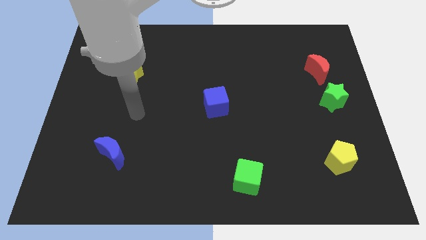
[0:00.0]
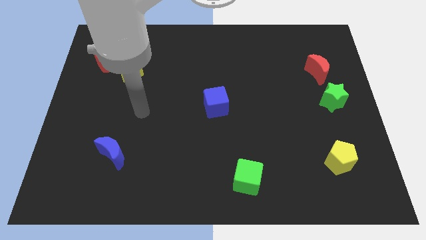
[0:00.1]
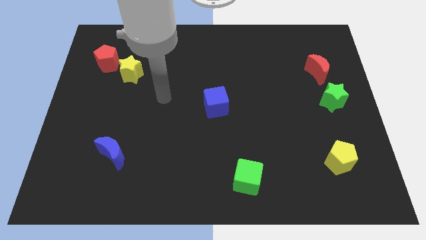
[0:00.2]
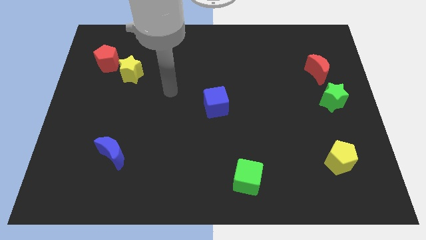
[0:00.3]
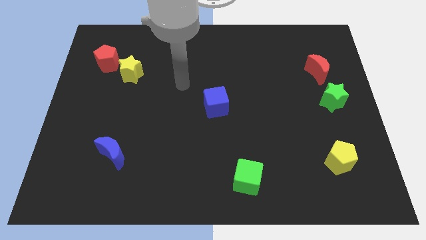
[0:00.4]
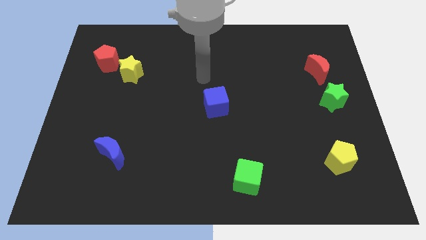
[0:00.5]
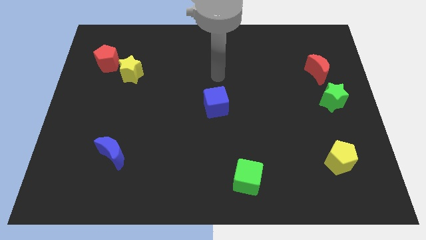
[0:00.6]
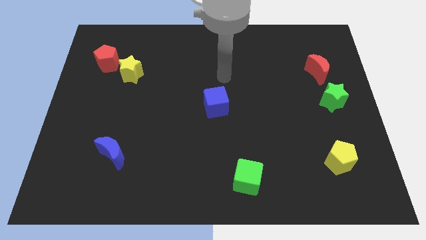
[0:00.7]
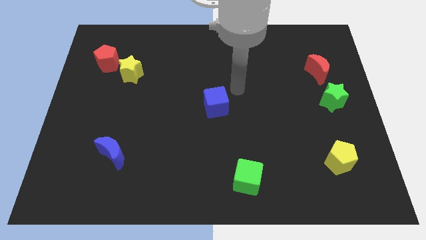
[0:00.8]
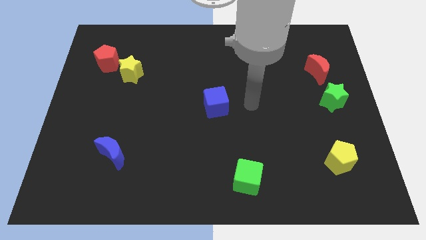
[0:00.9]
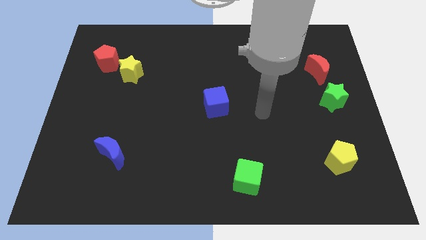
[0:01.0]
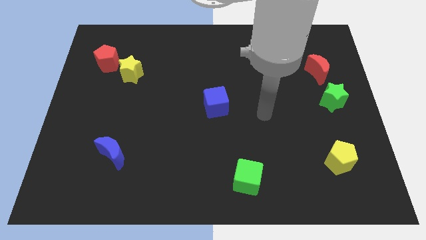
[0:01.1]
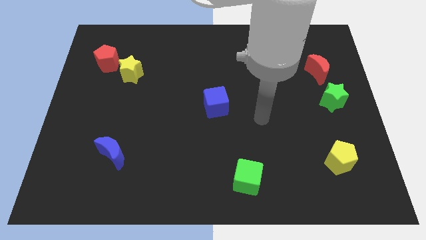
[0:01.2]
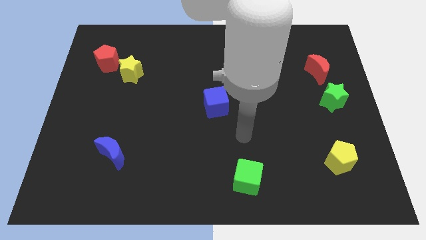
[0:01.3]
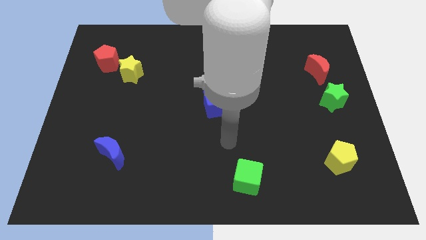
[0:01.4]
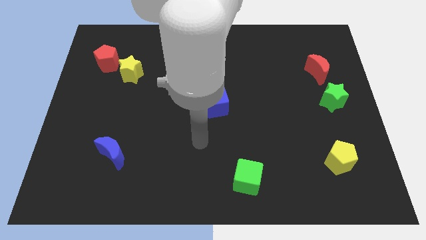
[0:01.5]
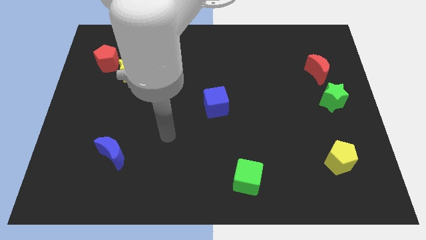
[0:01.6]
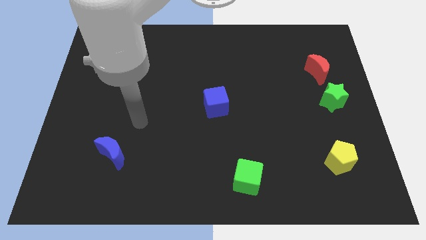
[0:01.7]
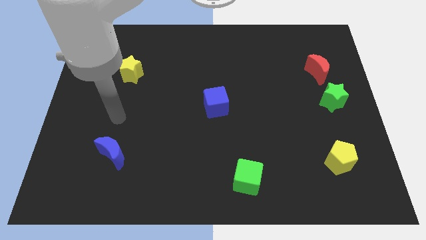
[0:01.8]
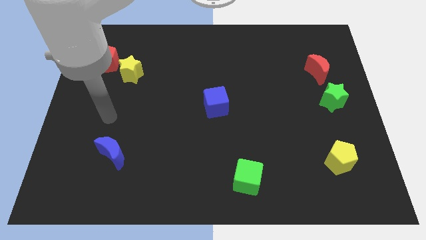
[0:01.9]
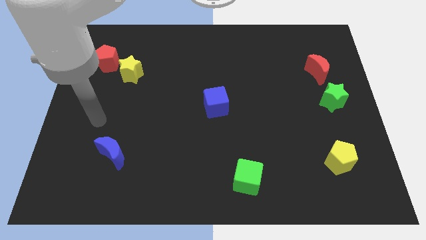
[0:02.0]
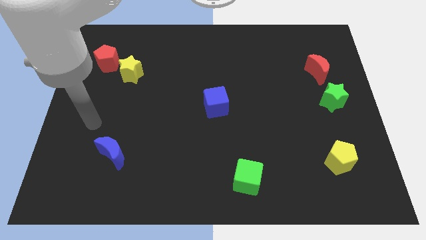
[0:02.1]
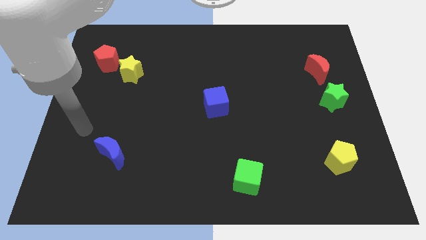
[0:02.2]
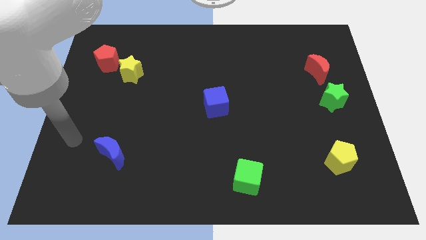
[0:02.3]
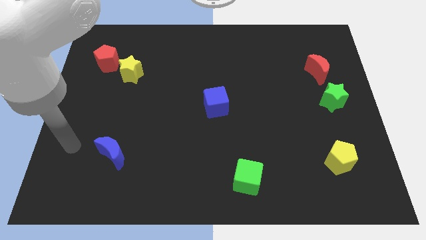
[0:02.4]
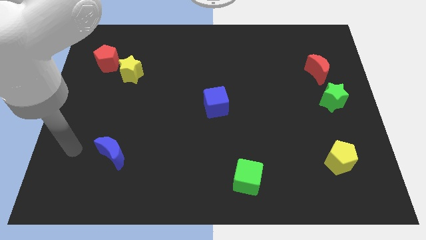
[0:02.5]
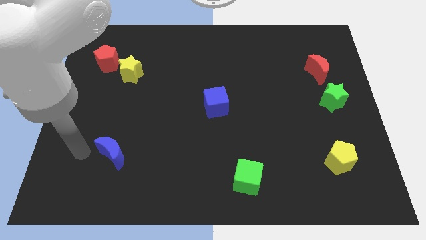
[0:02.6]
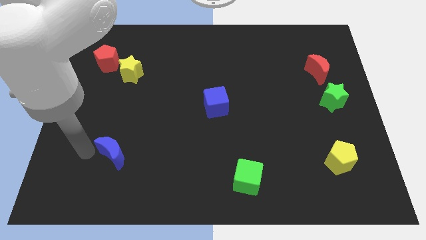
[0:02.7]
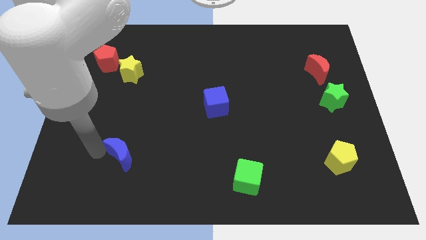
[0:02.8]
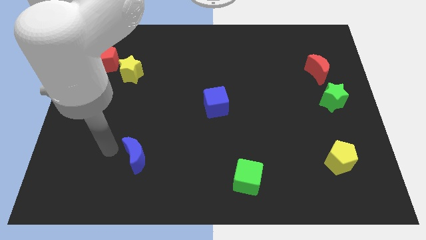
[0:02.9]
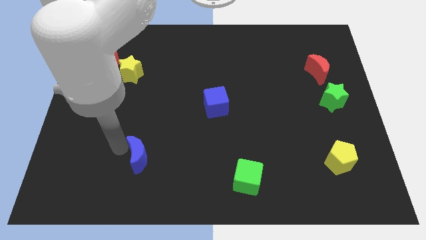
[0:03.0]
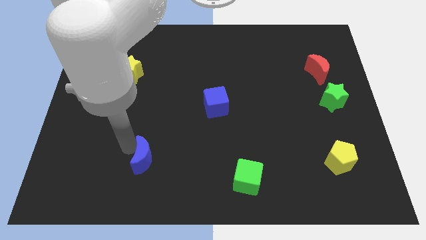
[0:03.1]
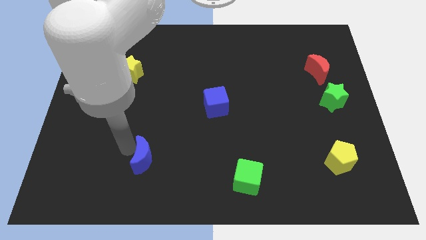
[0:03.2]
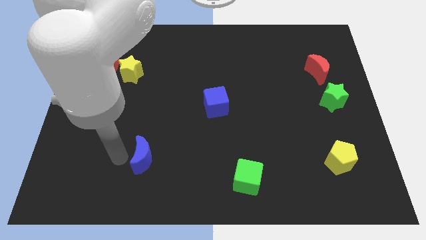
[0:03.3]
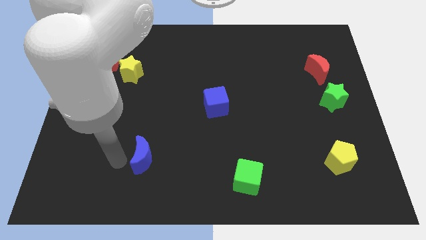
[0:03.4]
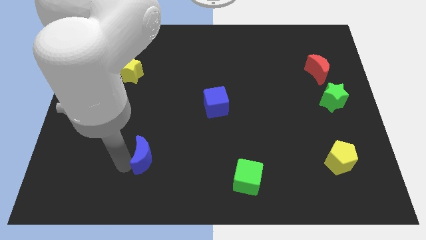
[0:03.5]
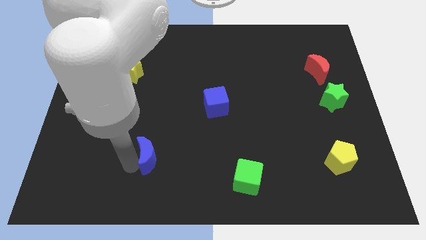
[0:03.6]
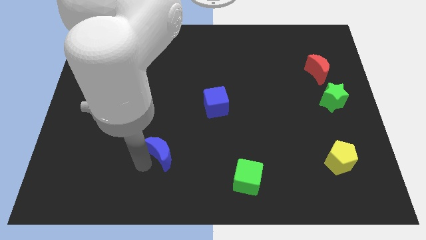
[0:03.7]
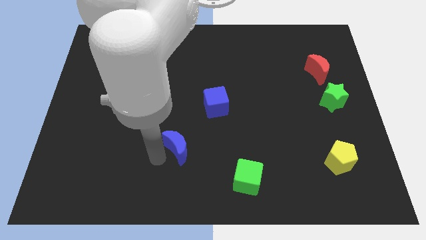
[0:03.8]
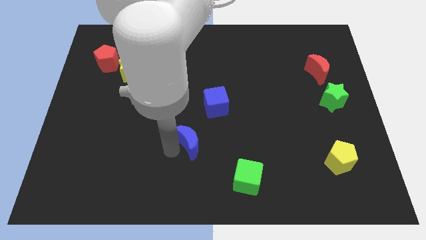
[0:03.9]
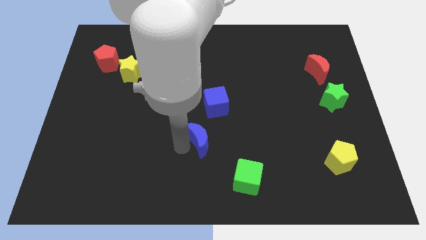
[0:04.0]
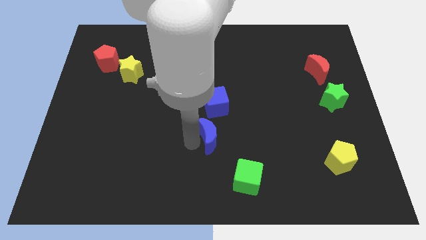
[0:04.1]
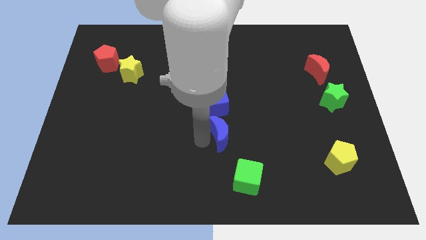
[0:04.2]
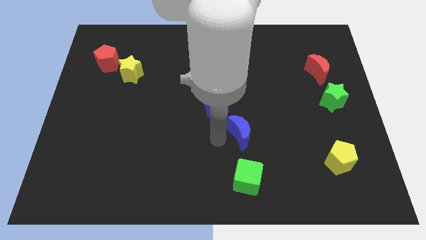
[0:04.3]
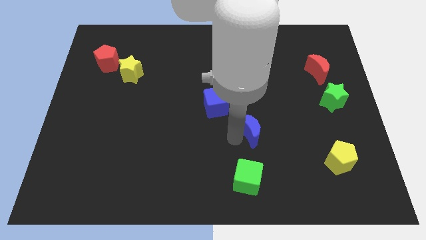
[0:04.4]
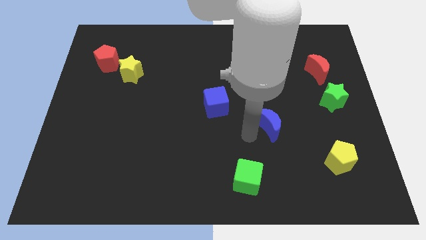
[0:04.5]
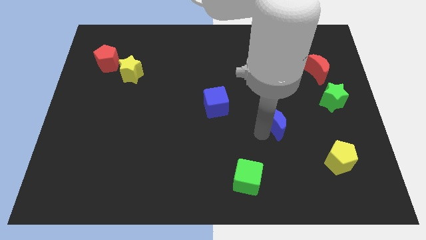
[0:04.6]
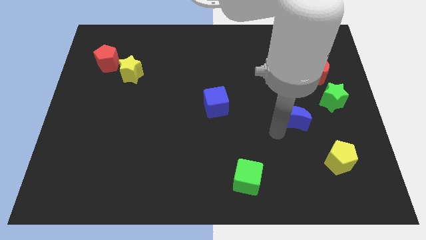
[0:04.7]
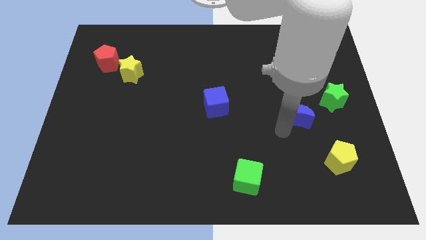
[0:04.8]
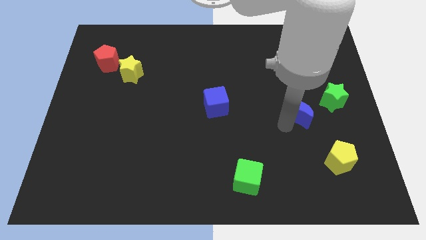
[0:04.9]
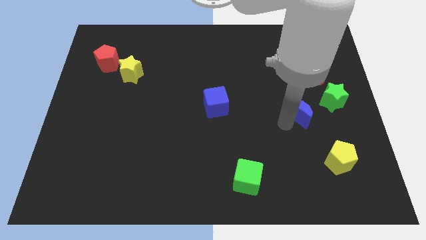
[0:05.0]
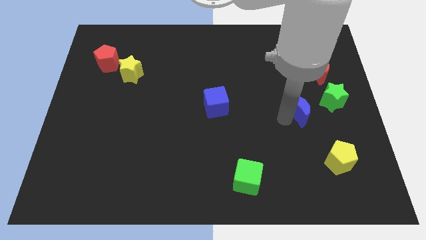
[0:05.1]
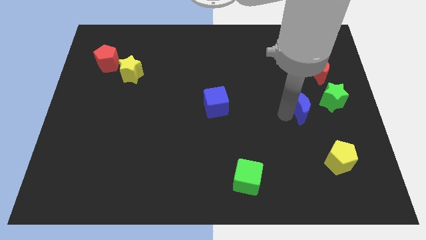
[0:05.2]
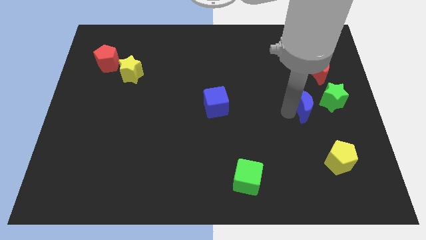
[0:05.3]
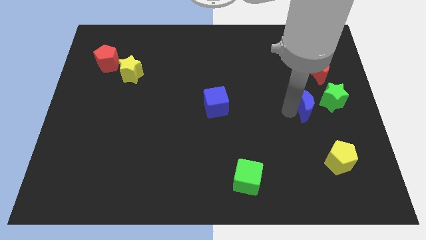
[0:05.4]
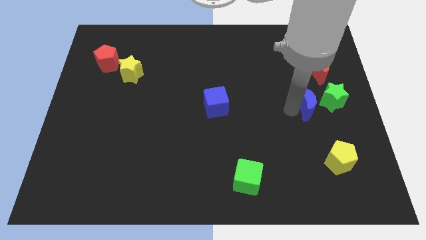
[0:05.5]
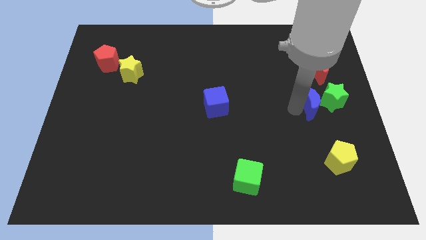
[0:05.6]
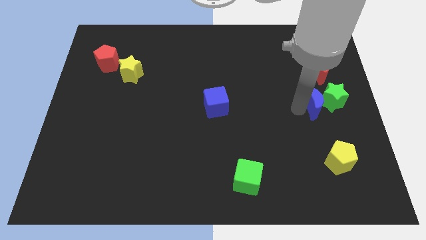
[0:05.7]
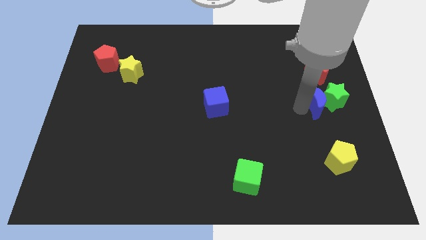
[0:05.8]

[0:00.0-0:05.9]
push the blue moon next to the green star

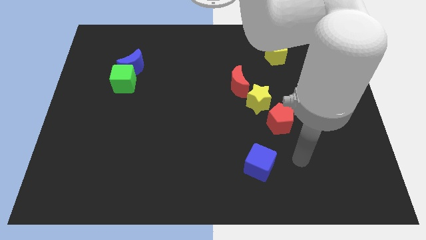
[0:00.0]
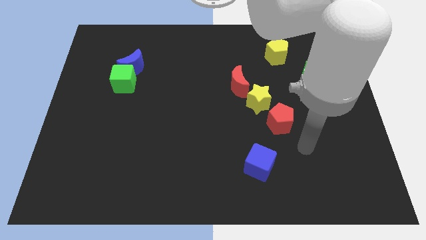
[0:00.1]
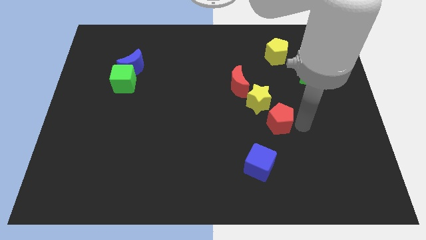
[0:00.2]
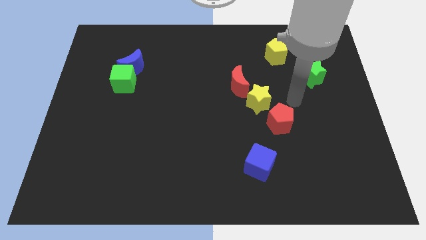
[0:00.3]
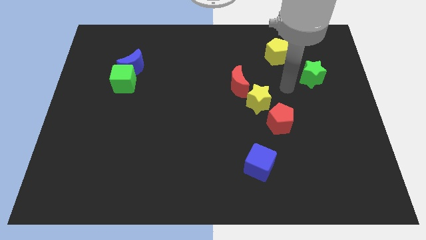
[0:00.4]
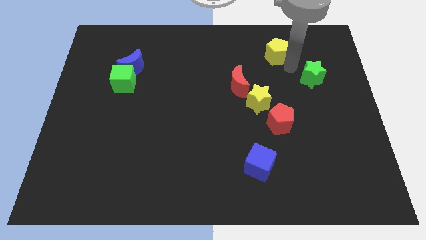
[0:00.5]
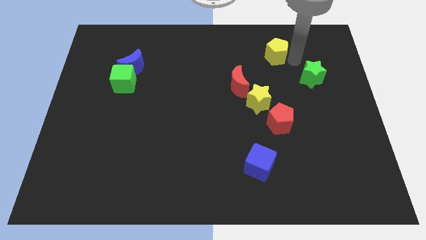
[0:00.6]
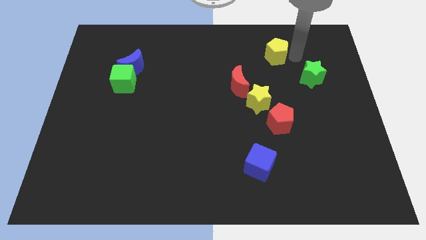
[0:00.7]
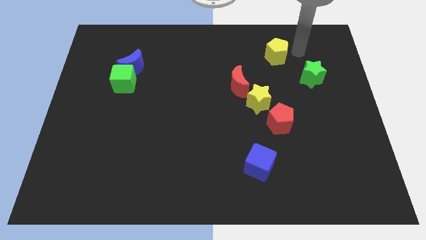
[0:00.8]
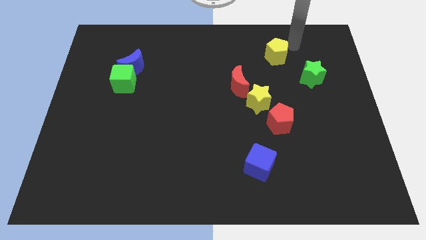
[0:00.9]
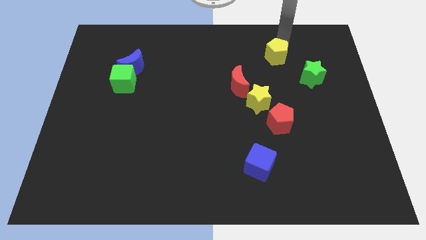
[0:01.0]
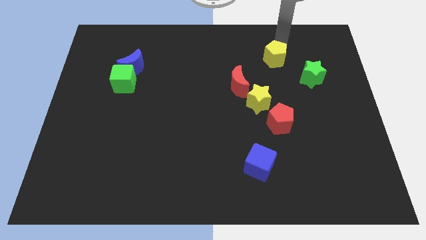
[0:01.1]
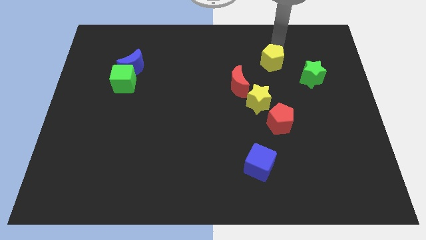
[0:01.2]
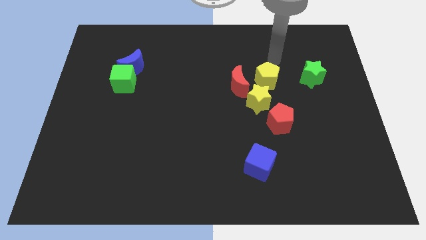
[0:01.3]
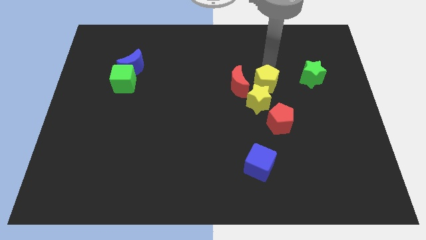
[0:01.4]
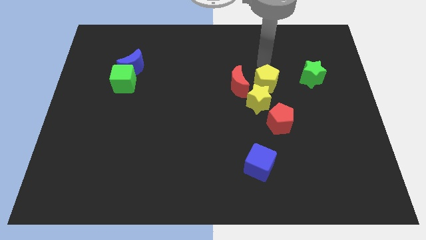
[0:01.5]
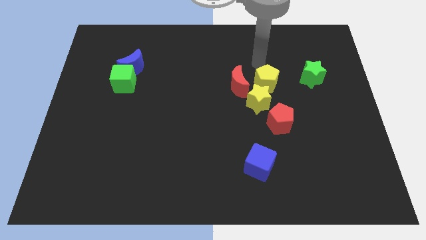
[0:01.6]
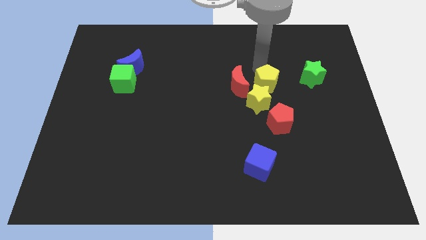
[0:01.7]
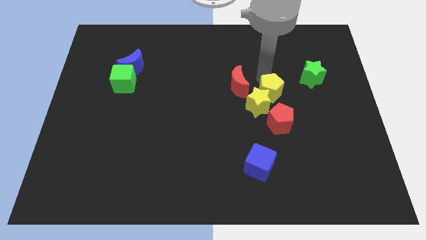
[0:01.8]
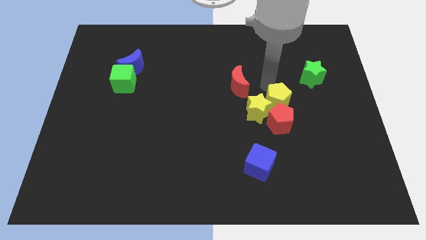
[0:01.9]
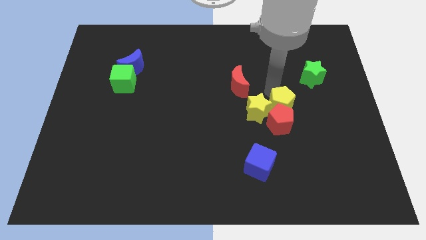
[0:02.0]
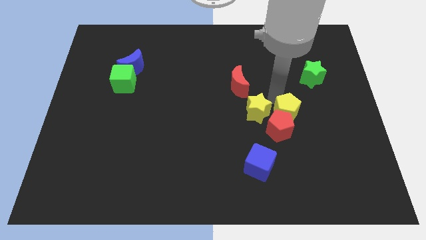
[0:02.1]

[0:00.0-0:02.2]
push the yellow pentagon to the red pentagon

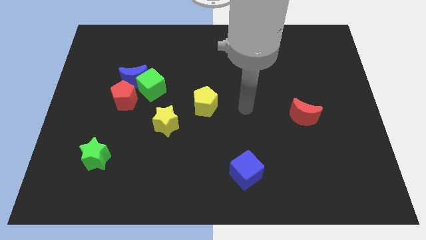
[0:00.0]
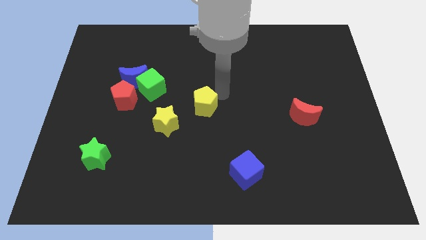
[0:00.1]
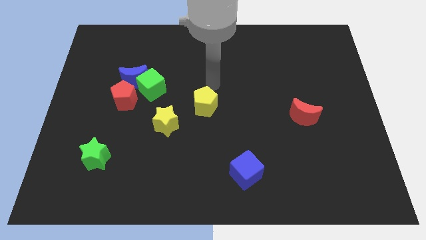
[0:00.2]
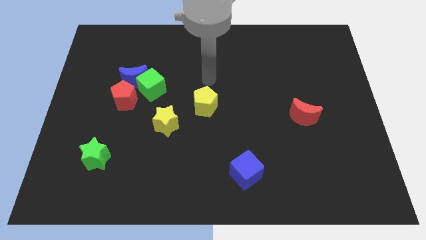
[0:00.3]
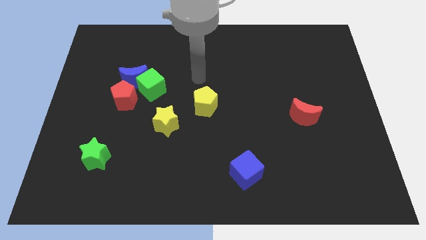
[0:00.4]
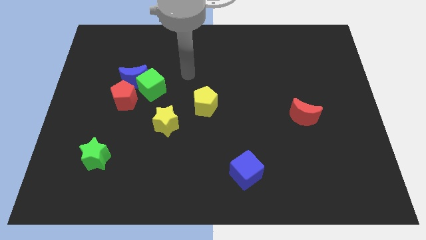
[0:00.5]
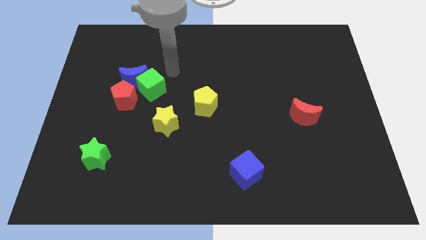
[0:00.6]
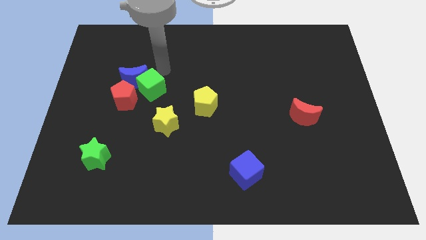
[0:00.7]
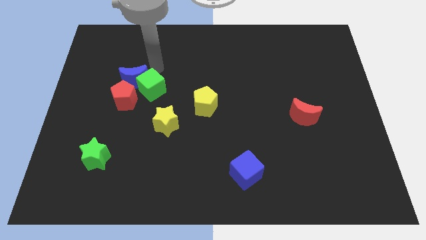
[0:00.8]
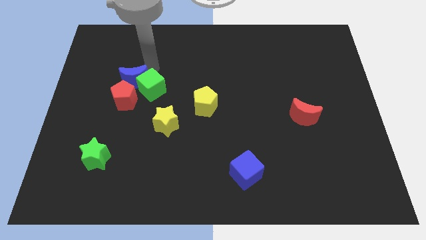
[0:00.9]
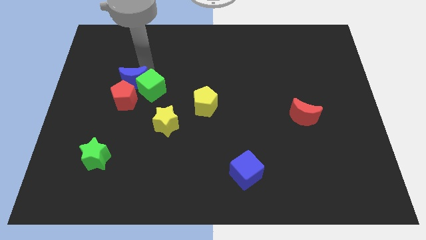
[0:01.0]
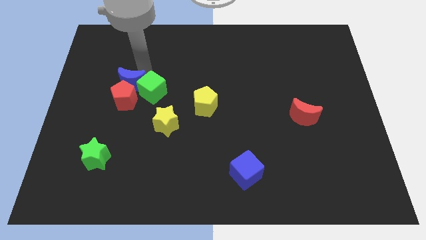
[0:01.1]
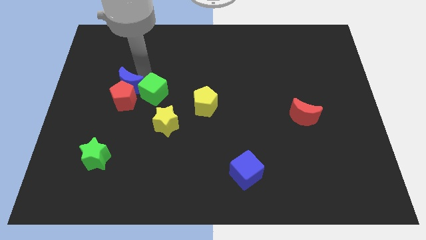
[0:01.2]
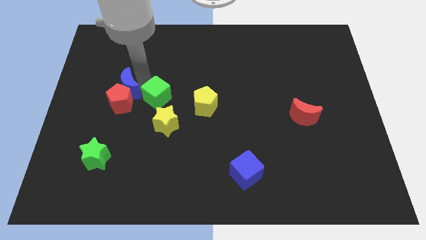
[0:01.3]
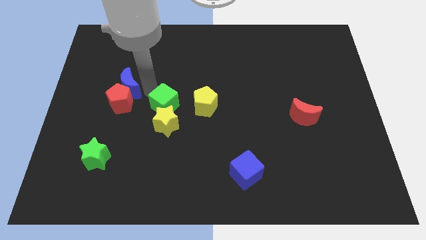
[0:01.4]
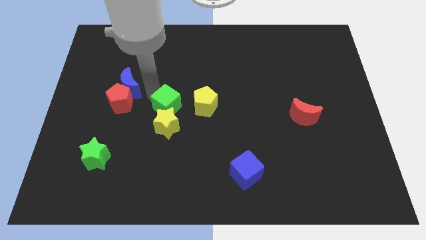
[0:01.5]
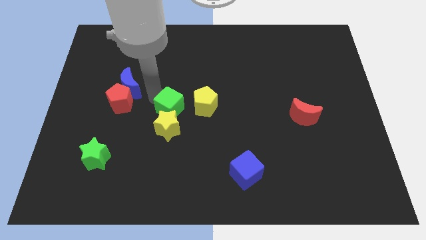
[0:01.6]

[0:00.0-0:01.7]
move the green cube towards the yellow star
